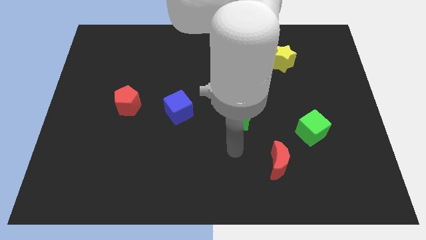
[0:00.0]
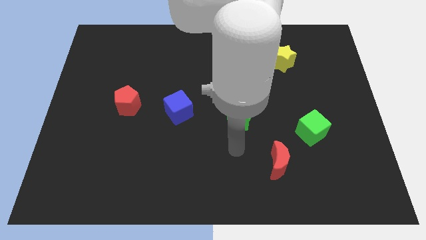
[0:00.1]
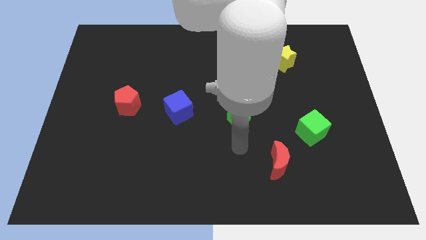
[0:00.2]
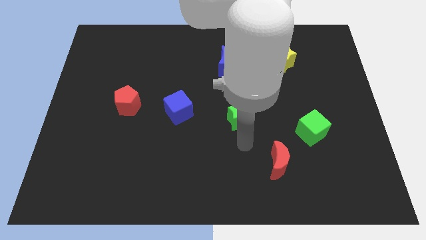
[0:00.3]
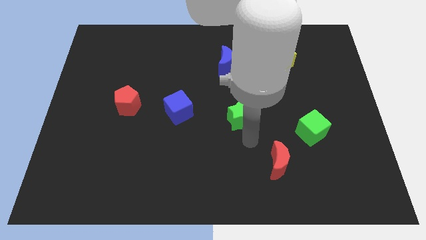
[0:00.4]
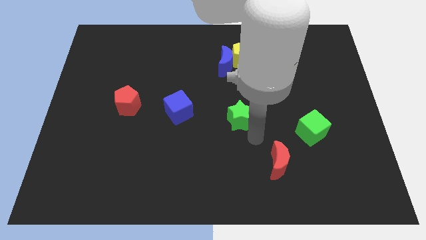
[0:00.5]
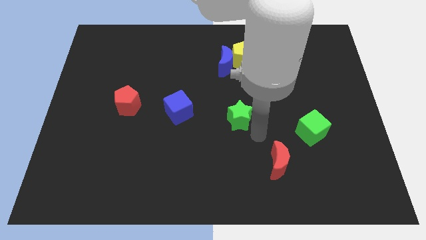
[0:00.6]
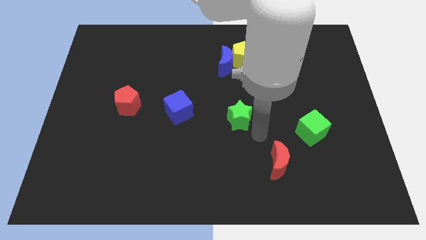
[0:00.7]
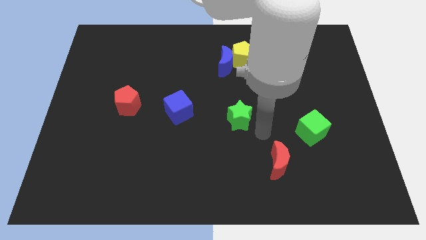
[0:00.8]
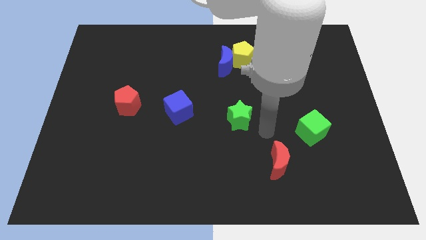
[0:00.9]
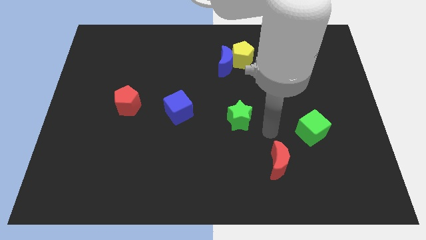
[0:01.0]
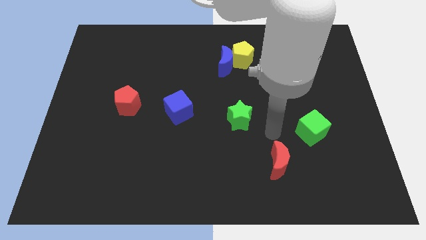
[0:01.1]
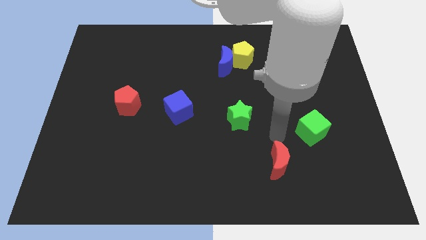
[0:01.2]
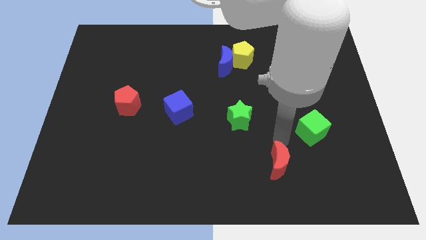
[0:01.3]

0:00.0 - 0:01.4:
point your arm at the top of the red crescent

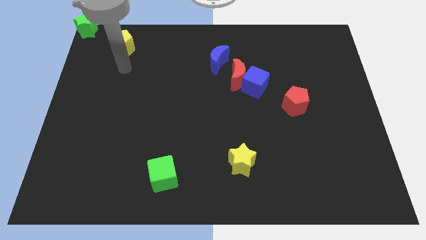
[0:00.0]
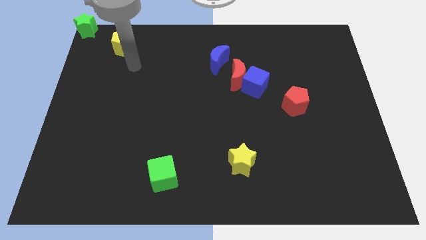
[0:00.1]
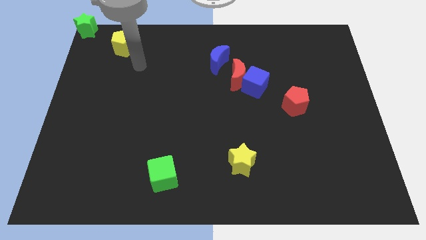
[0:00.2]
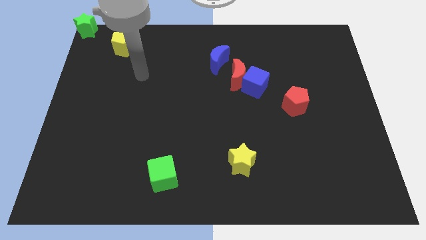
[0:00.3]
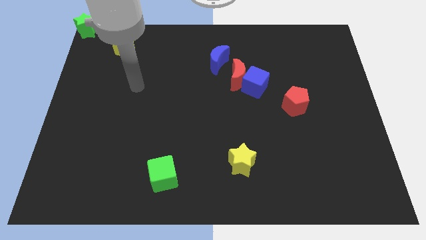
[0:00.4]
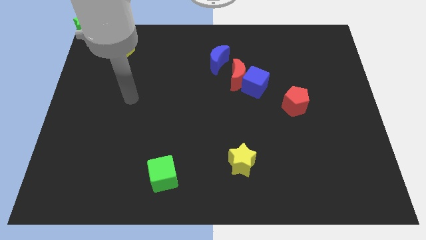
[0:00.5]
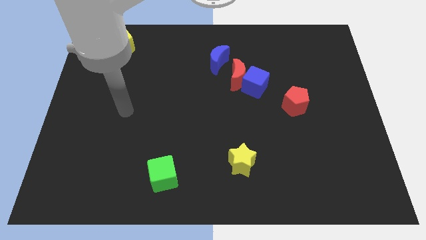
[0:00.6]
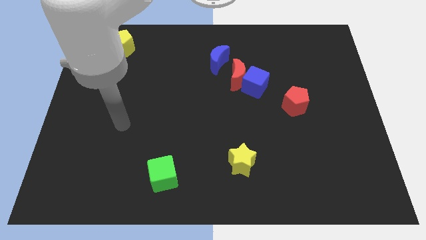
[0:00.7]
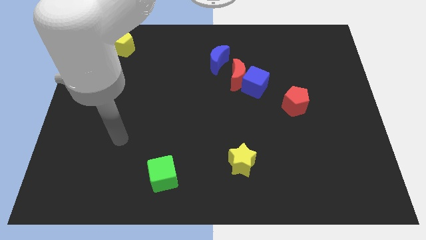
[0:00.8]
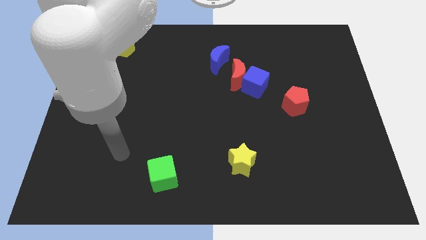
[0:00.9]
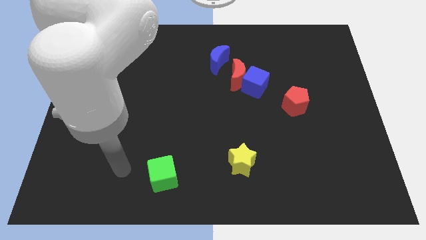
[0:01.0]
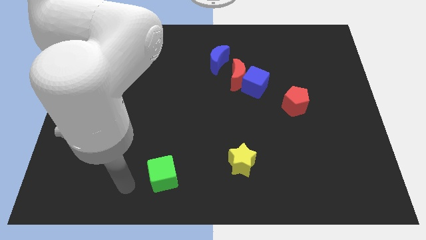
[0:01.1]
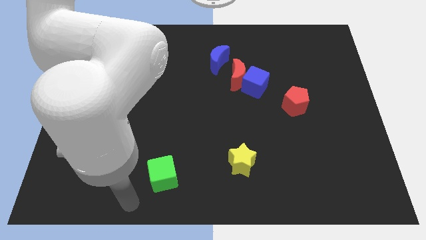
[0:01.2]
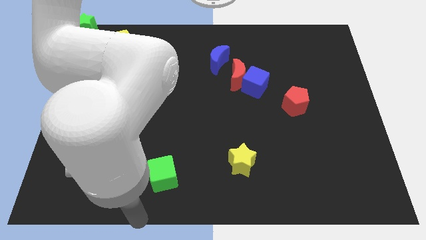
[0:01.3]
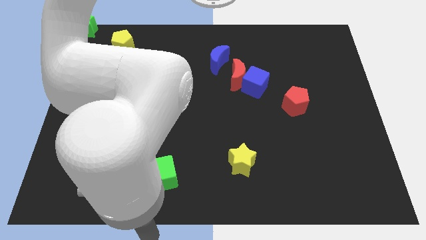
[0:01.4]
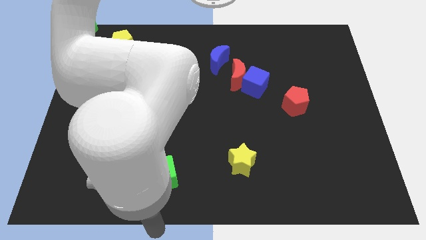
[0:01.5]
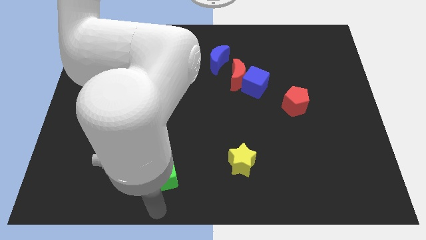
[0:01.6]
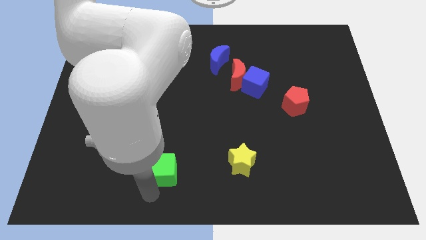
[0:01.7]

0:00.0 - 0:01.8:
tap the bottom side of the green cube

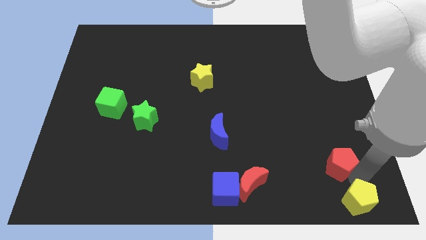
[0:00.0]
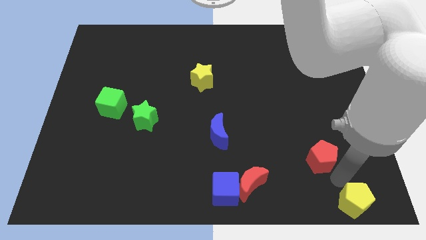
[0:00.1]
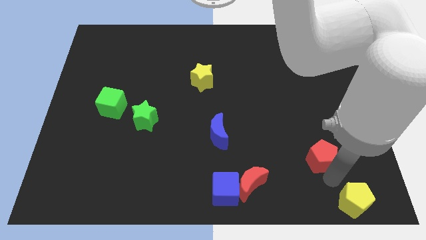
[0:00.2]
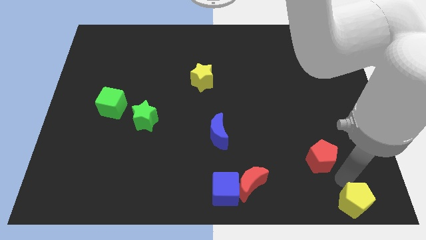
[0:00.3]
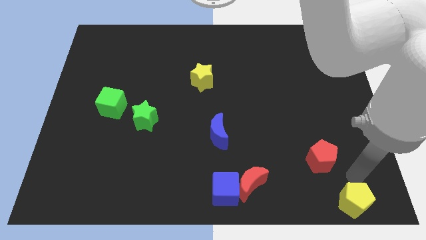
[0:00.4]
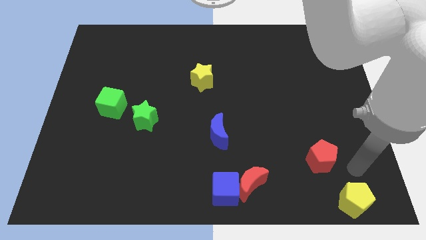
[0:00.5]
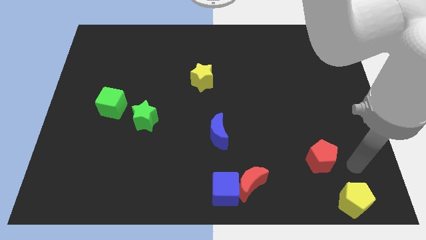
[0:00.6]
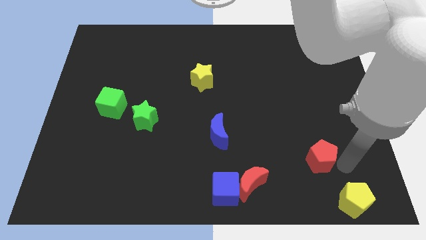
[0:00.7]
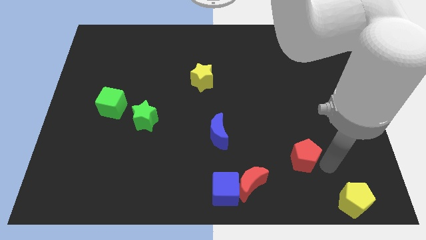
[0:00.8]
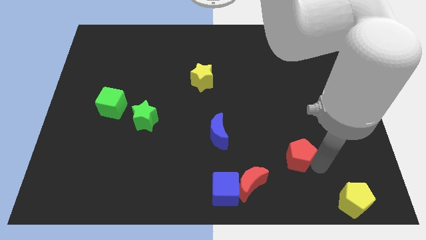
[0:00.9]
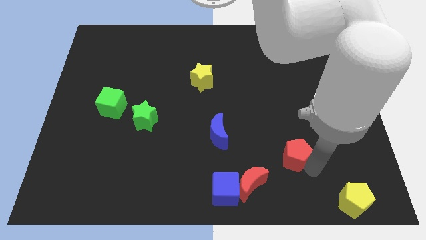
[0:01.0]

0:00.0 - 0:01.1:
separate red pentagon from yellow pentagon

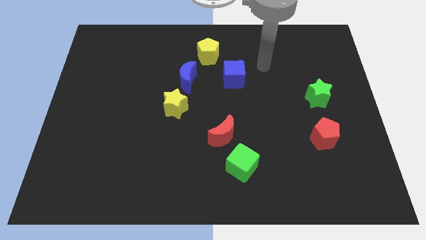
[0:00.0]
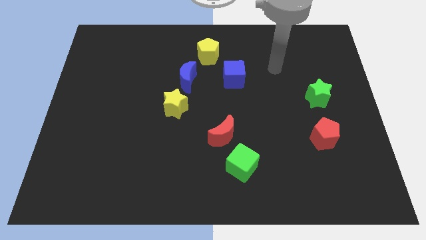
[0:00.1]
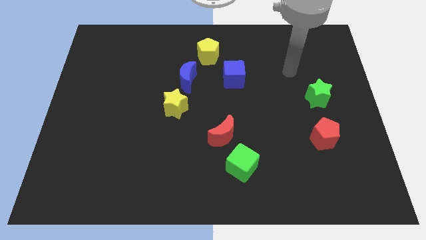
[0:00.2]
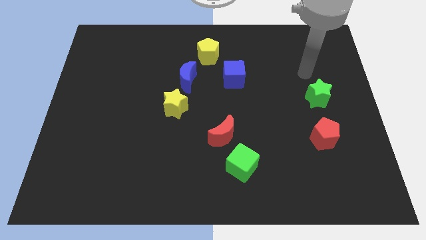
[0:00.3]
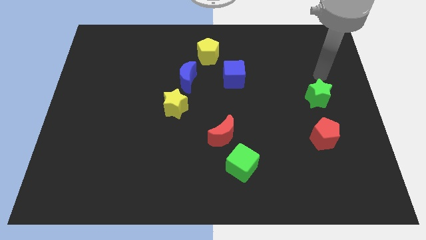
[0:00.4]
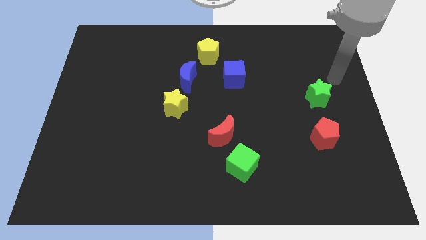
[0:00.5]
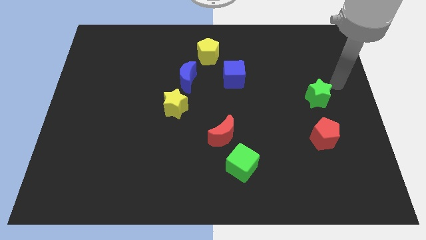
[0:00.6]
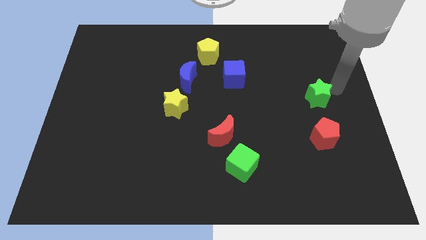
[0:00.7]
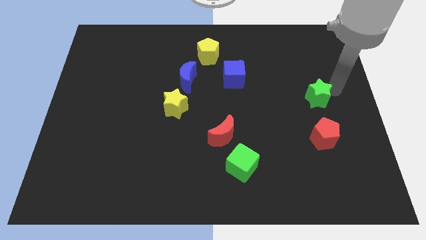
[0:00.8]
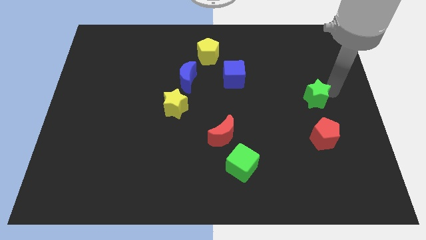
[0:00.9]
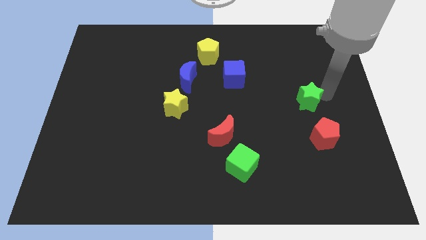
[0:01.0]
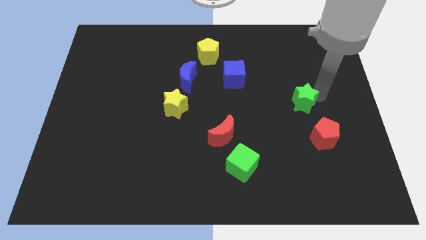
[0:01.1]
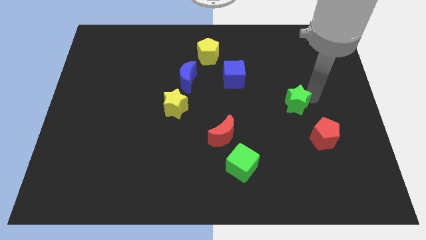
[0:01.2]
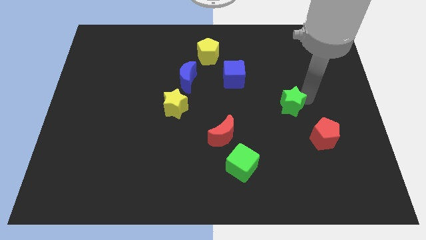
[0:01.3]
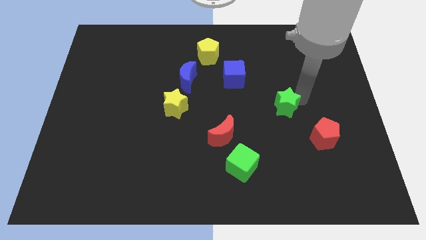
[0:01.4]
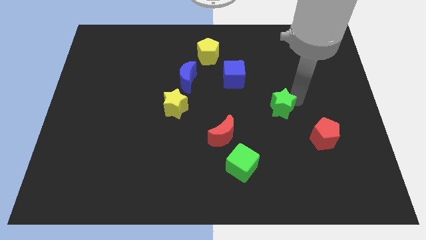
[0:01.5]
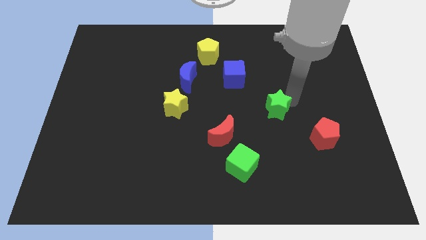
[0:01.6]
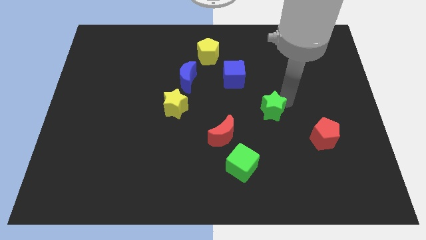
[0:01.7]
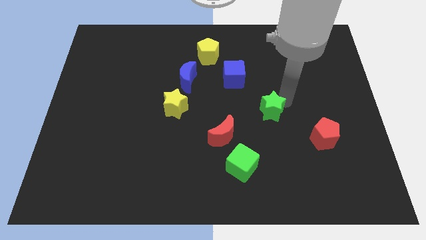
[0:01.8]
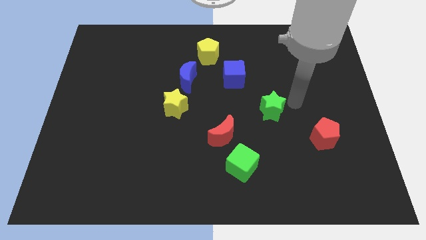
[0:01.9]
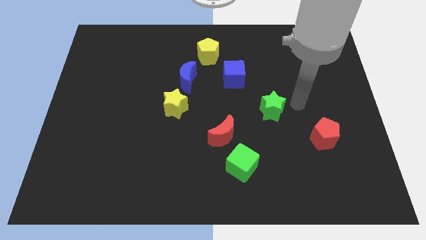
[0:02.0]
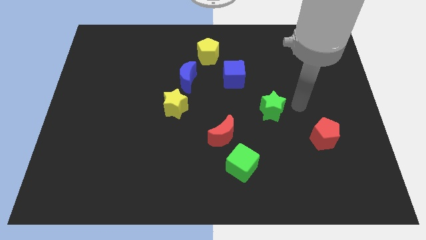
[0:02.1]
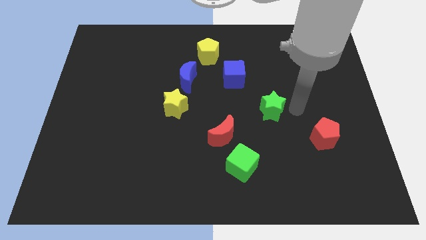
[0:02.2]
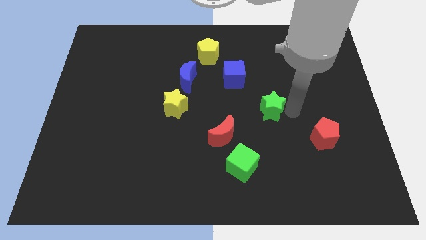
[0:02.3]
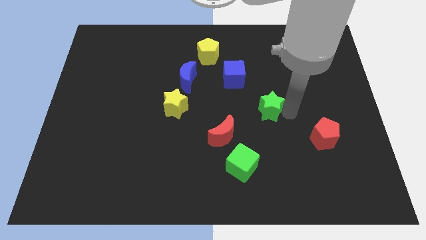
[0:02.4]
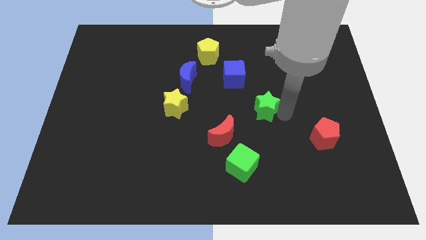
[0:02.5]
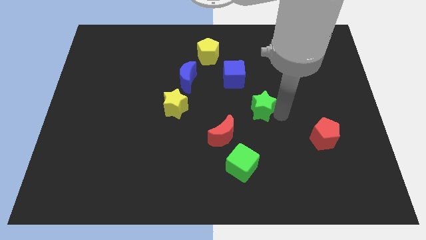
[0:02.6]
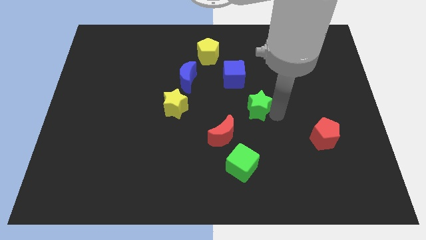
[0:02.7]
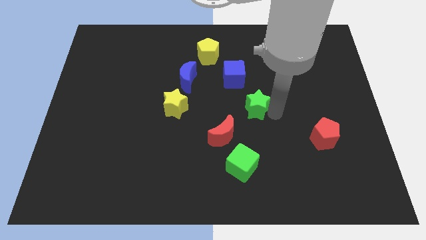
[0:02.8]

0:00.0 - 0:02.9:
move the green star towards center

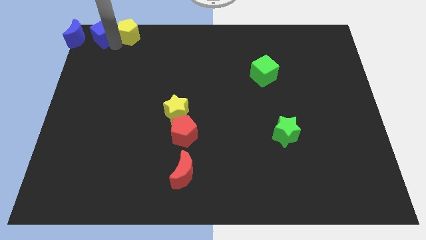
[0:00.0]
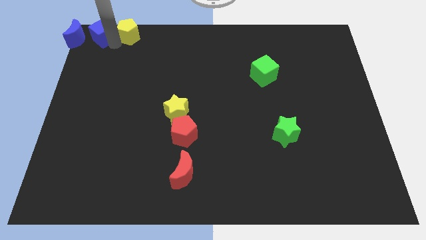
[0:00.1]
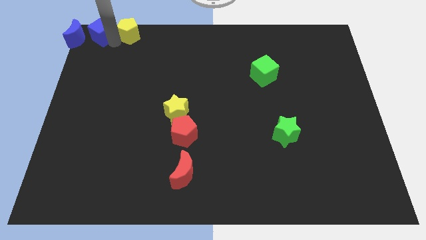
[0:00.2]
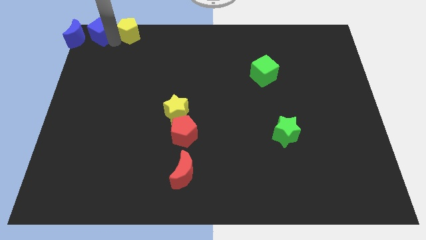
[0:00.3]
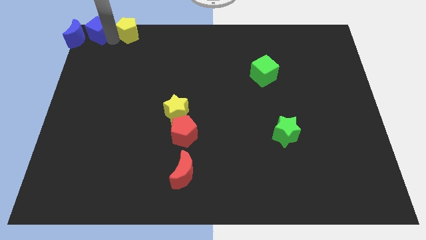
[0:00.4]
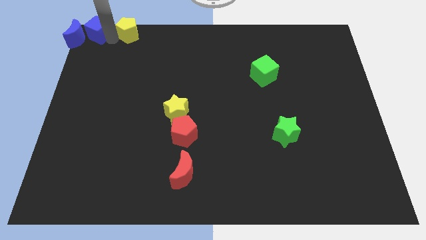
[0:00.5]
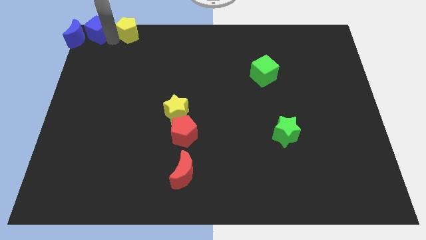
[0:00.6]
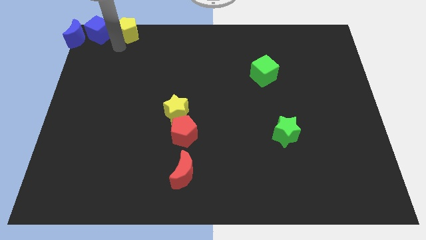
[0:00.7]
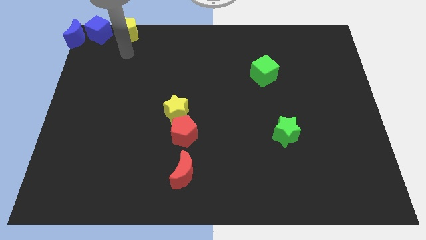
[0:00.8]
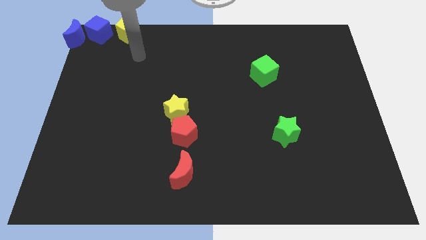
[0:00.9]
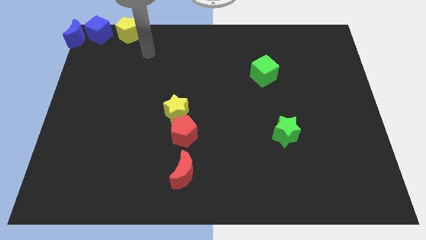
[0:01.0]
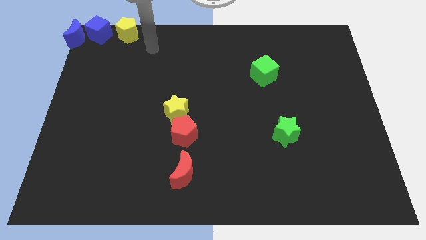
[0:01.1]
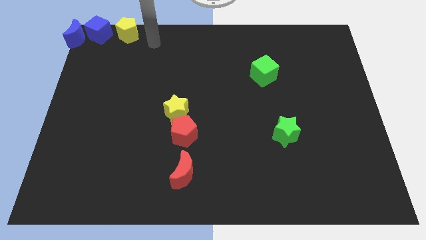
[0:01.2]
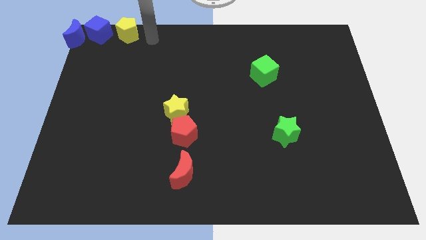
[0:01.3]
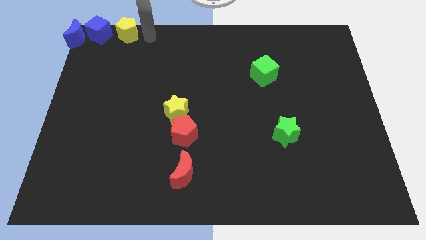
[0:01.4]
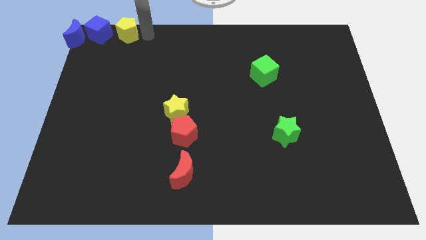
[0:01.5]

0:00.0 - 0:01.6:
move the arm towards the right of yellow pentagon
